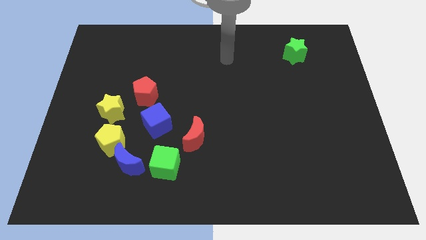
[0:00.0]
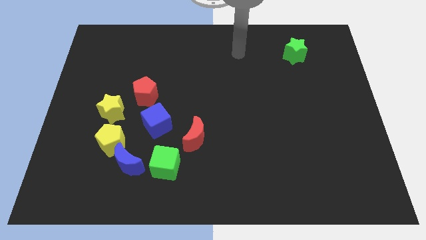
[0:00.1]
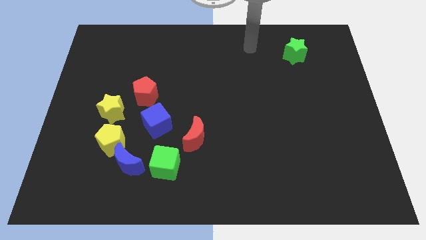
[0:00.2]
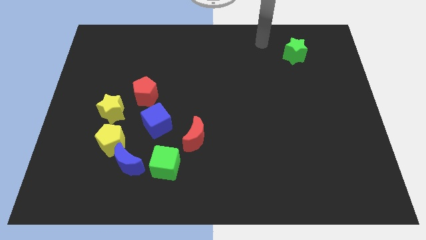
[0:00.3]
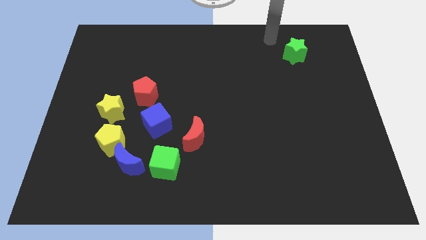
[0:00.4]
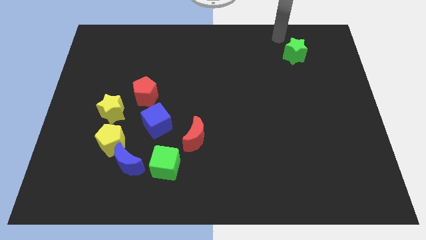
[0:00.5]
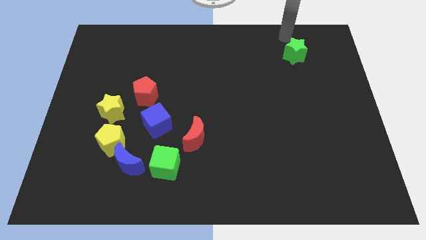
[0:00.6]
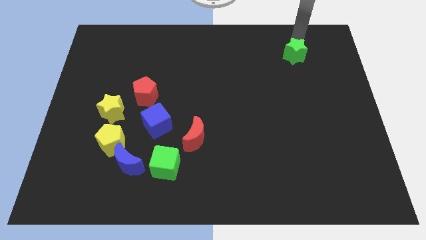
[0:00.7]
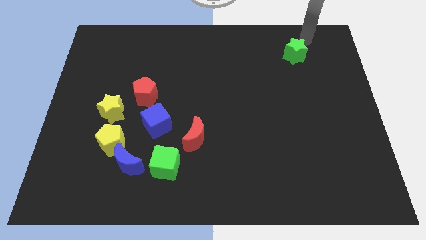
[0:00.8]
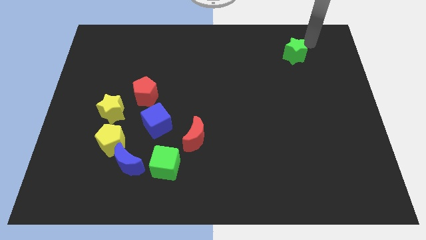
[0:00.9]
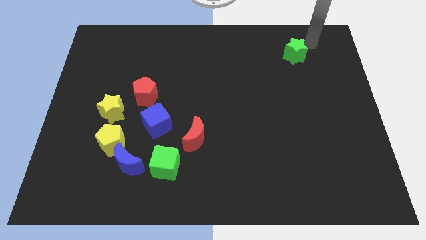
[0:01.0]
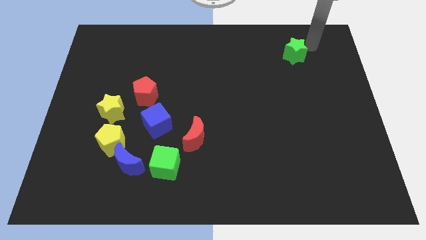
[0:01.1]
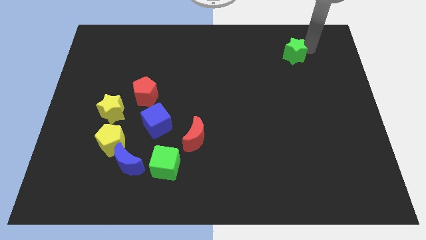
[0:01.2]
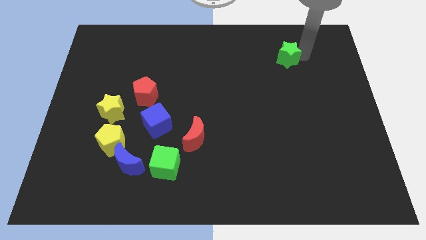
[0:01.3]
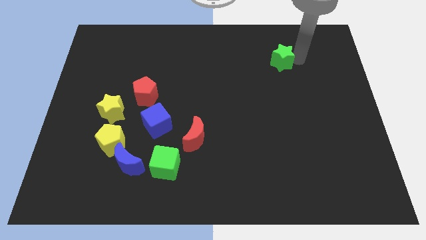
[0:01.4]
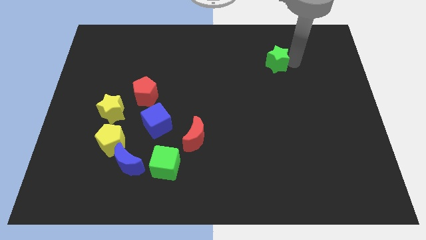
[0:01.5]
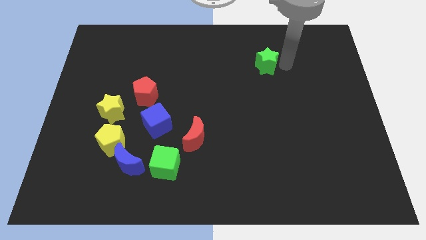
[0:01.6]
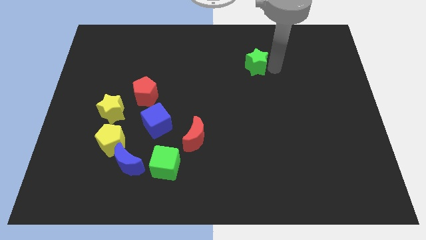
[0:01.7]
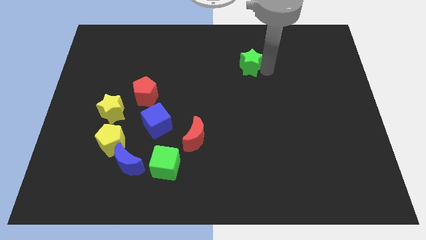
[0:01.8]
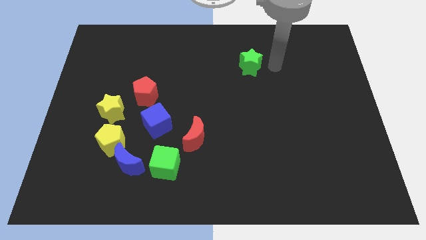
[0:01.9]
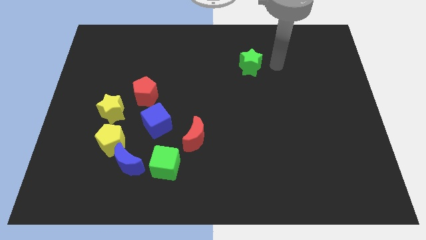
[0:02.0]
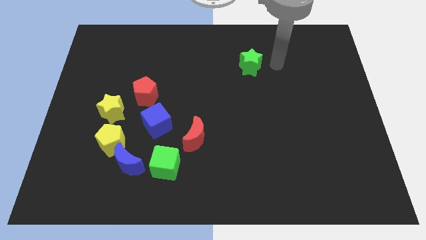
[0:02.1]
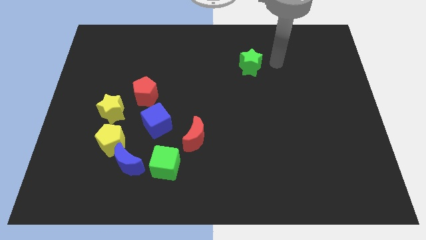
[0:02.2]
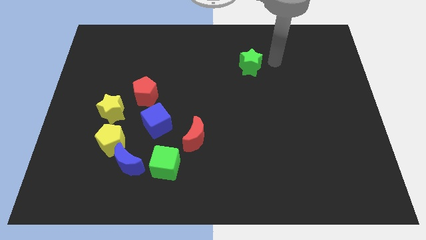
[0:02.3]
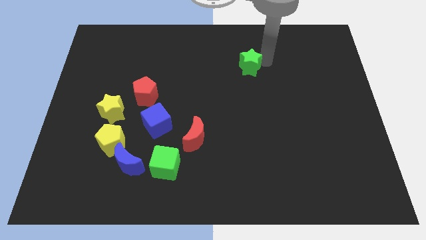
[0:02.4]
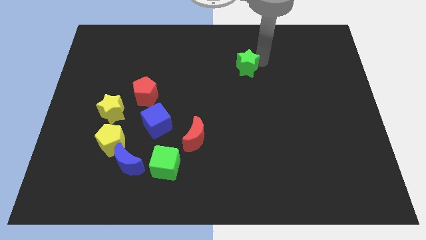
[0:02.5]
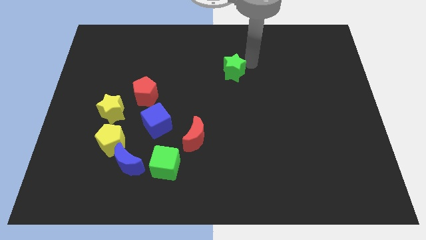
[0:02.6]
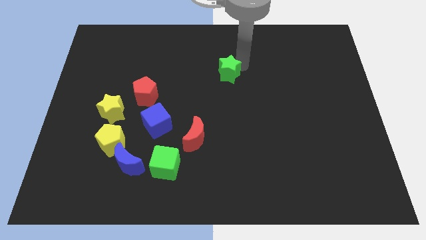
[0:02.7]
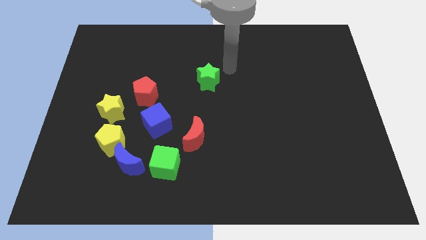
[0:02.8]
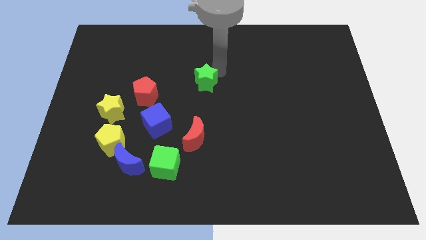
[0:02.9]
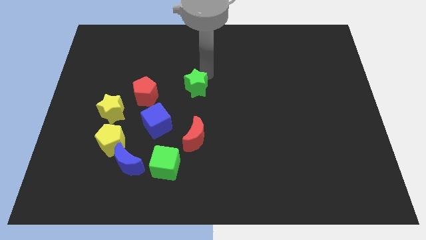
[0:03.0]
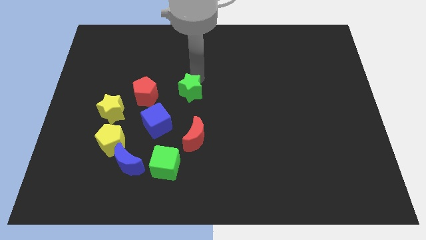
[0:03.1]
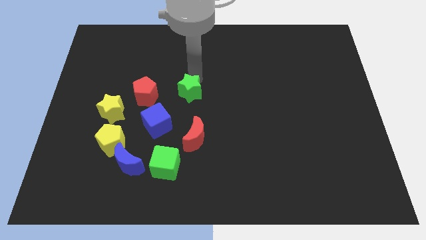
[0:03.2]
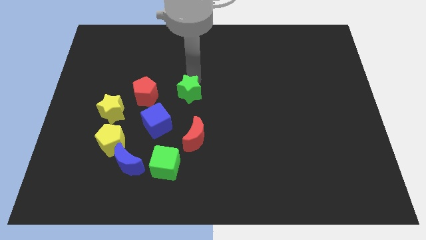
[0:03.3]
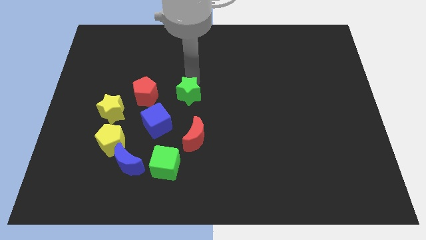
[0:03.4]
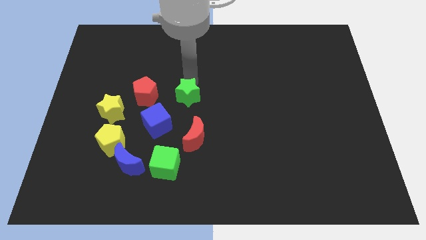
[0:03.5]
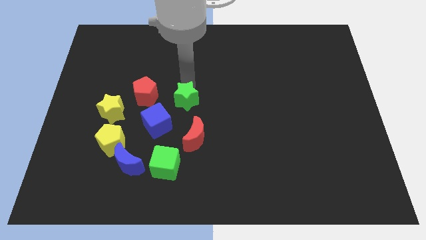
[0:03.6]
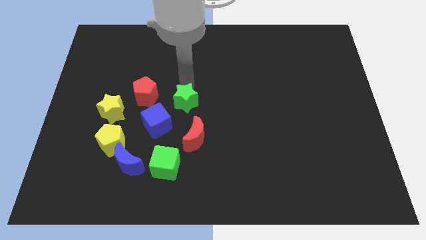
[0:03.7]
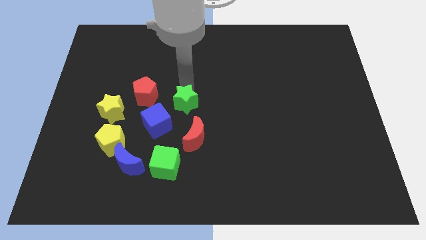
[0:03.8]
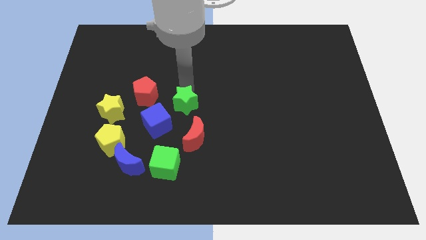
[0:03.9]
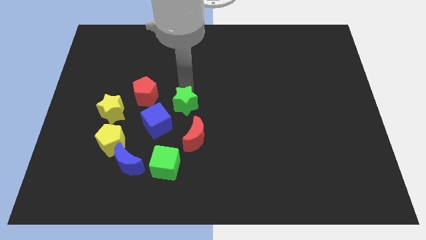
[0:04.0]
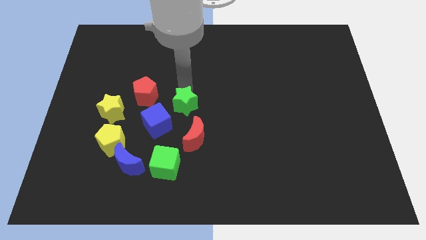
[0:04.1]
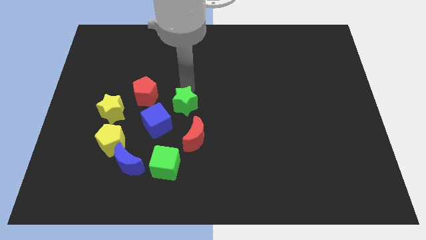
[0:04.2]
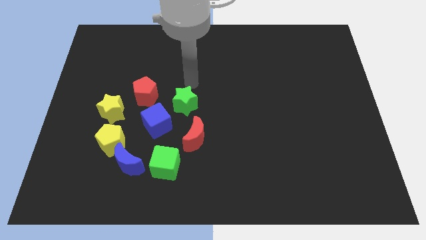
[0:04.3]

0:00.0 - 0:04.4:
push green star to the group of blocks

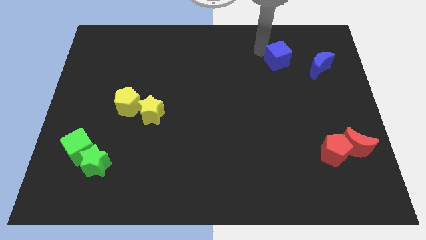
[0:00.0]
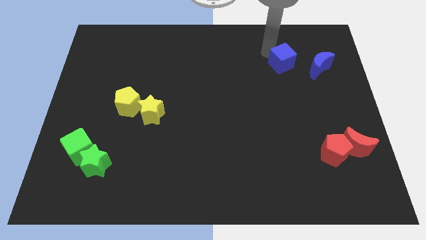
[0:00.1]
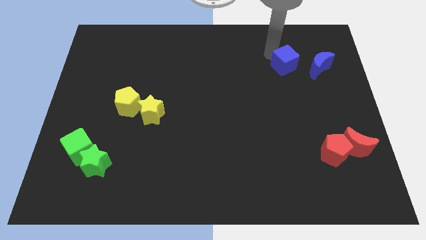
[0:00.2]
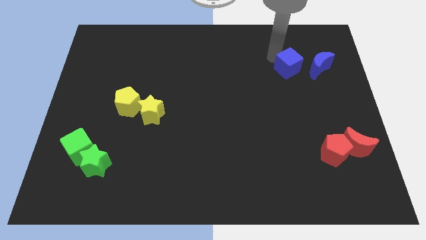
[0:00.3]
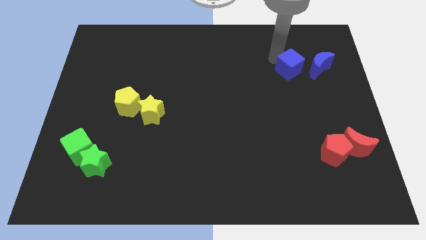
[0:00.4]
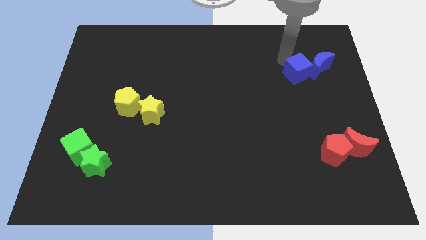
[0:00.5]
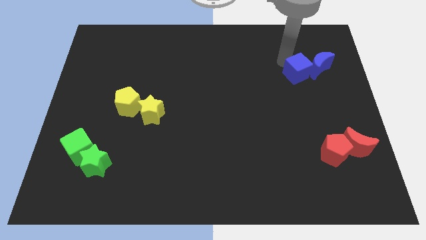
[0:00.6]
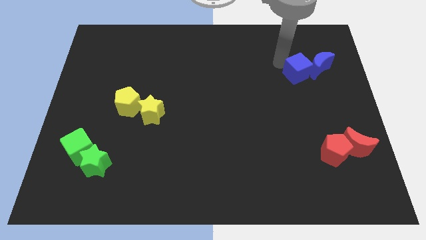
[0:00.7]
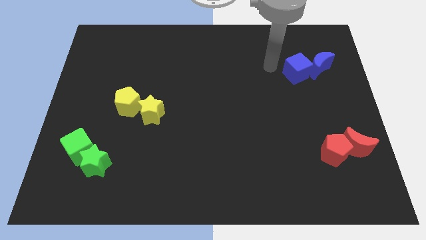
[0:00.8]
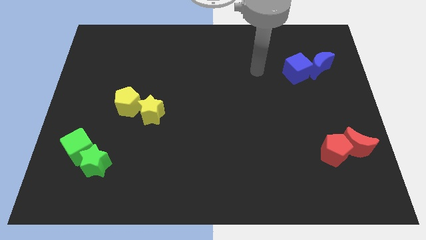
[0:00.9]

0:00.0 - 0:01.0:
move the blue cube close to blue crescent

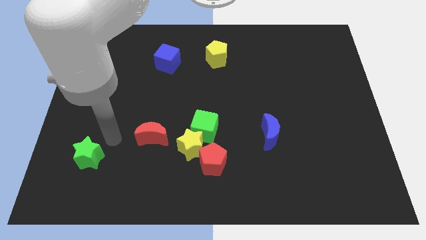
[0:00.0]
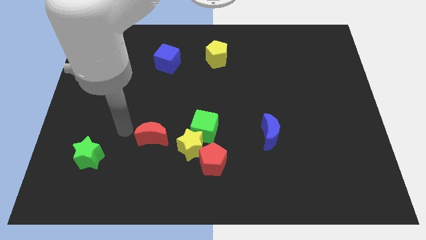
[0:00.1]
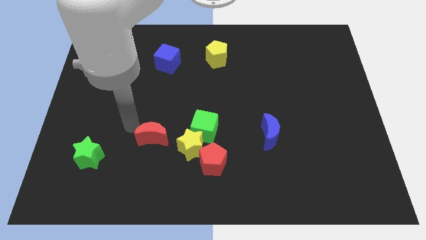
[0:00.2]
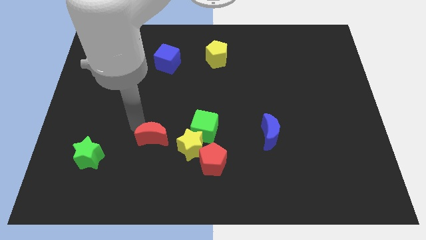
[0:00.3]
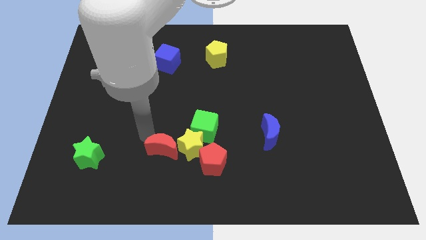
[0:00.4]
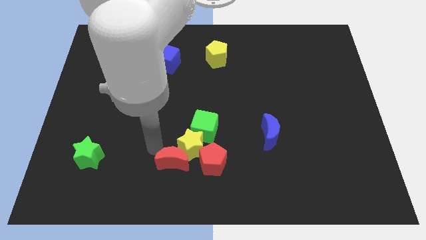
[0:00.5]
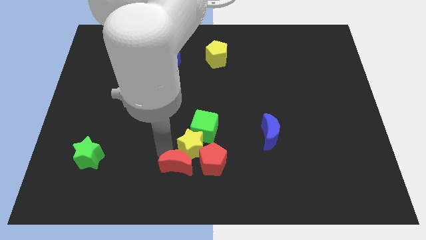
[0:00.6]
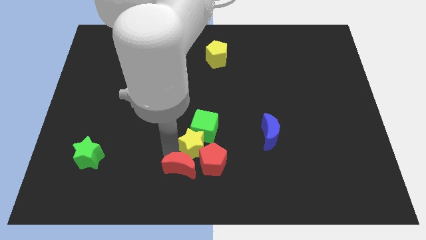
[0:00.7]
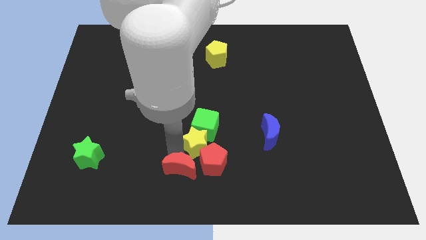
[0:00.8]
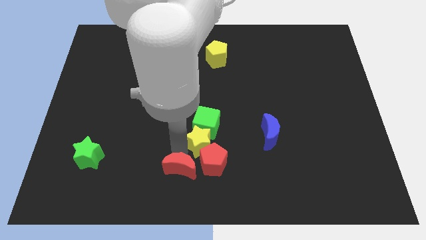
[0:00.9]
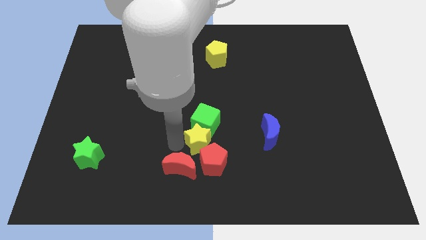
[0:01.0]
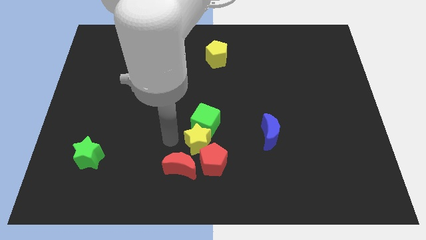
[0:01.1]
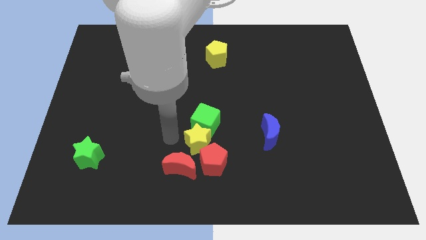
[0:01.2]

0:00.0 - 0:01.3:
move the red crescent to the left of the red pentagon

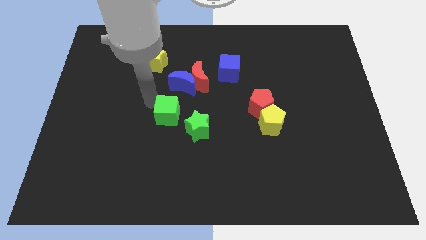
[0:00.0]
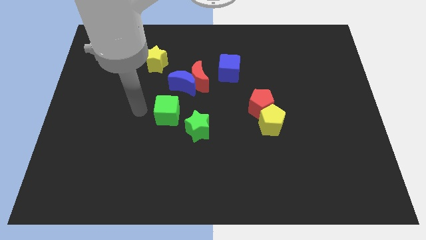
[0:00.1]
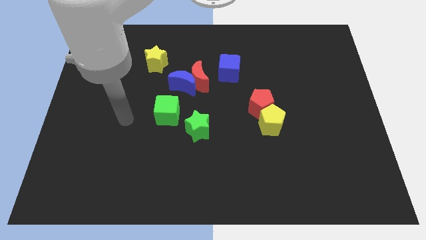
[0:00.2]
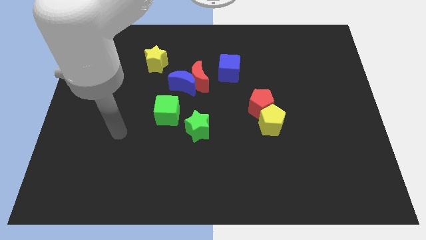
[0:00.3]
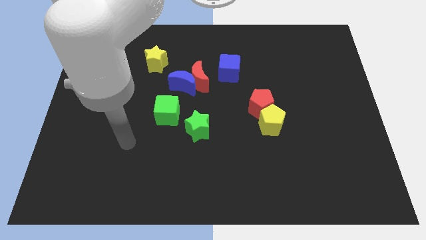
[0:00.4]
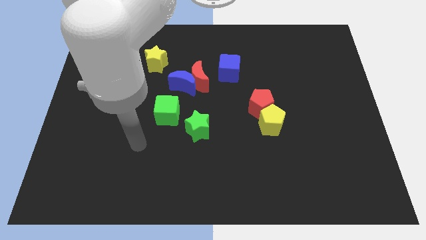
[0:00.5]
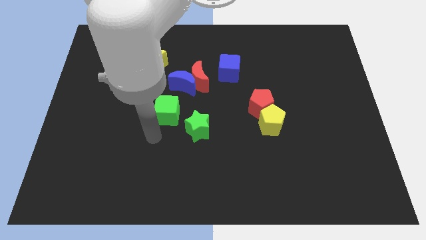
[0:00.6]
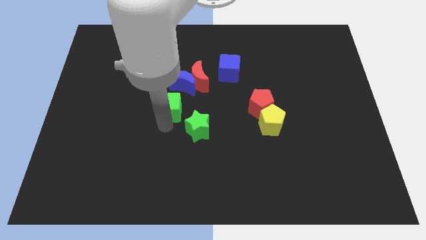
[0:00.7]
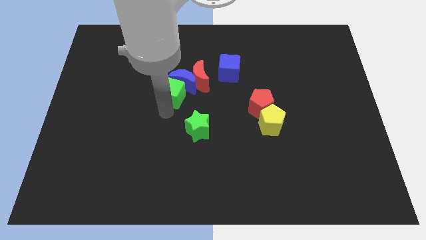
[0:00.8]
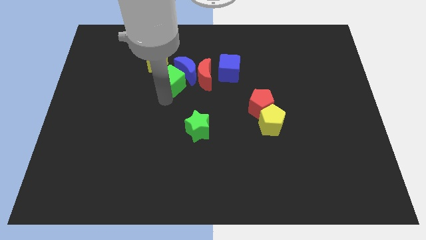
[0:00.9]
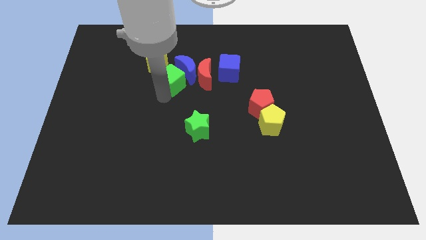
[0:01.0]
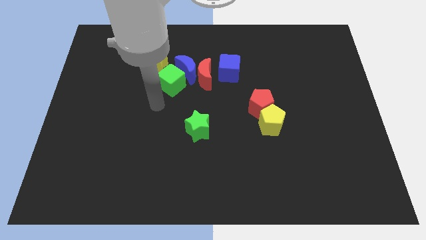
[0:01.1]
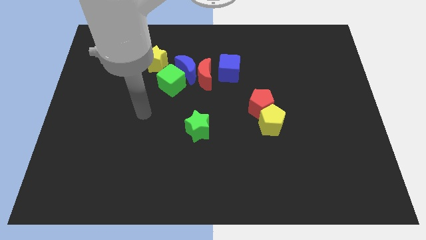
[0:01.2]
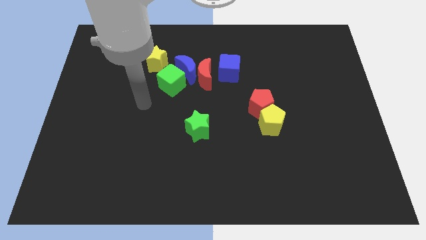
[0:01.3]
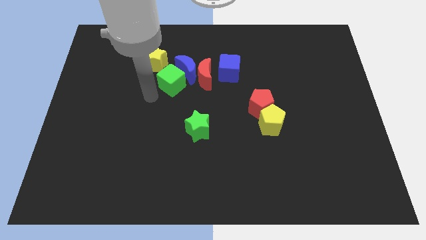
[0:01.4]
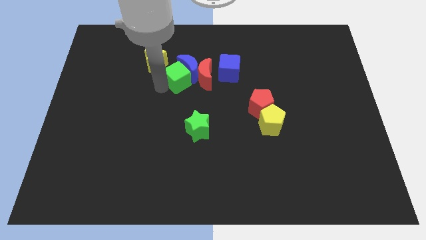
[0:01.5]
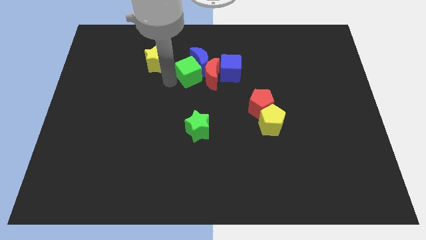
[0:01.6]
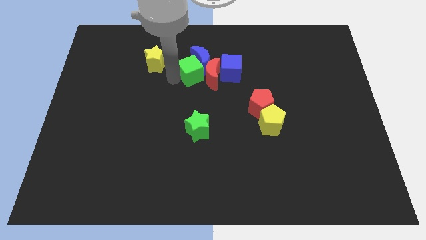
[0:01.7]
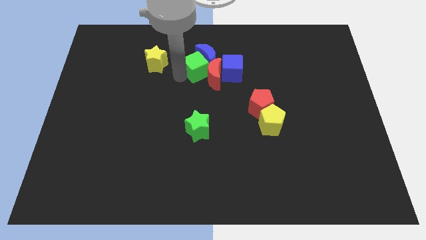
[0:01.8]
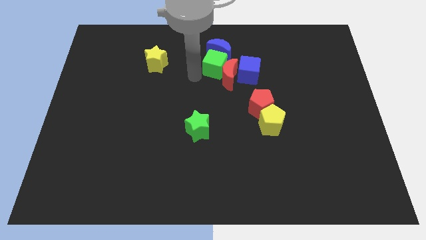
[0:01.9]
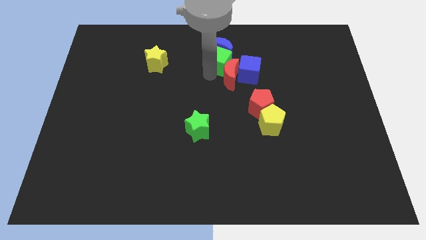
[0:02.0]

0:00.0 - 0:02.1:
slide green cube along with blue moon towards top center

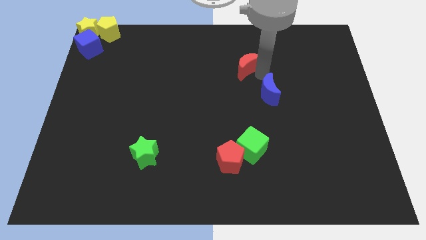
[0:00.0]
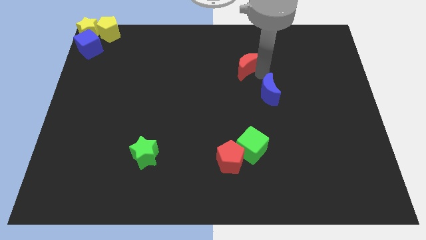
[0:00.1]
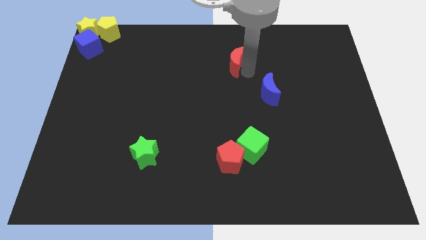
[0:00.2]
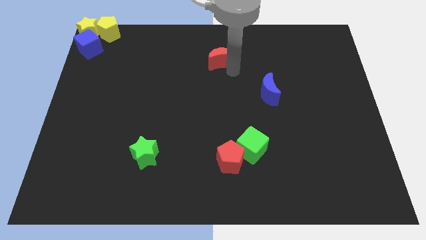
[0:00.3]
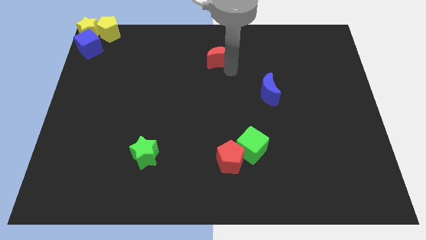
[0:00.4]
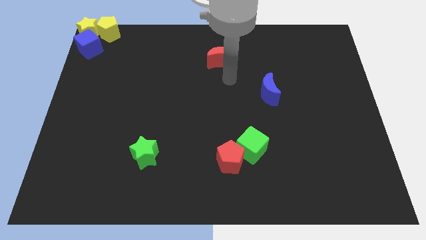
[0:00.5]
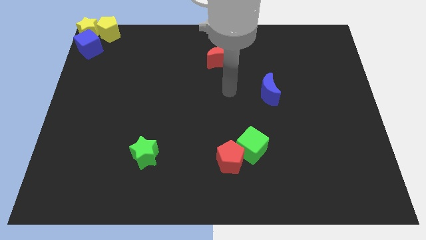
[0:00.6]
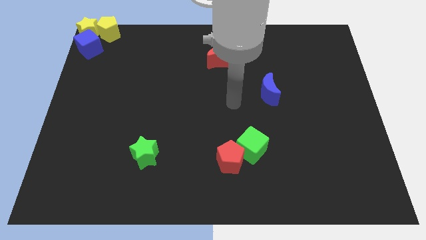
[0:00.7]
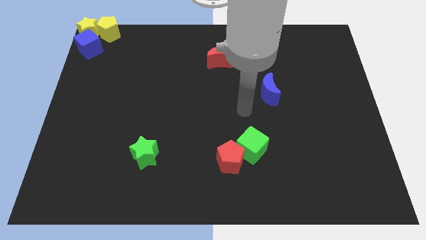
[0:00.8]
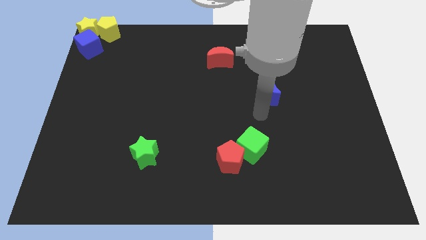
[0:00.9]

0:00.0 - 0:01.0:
push red moon away from the blue moon
